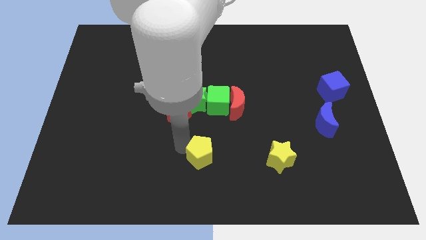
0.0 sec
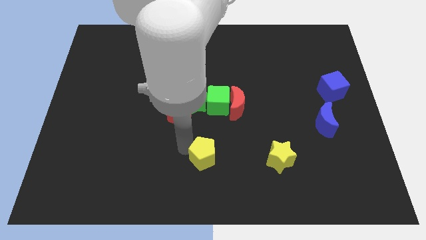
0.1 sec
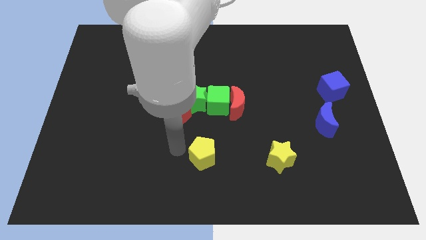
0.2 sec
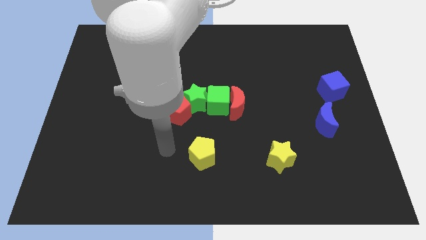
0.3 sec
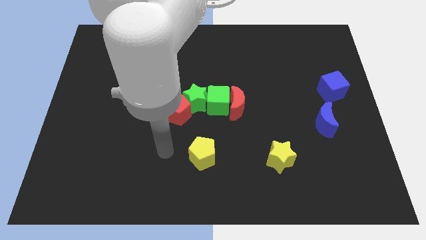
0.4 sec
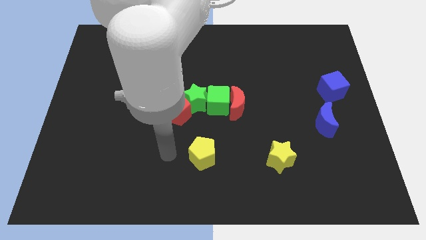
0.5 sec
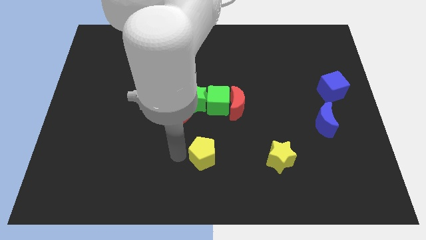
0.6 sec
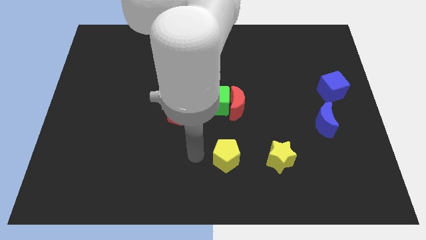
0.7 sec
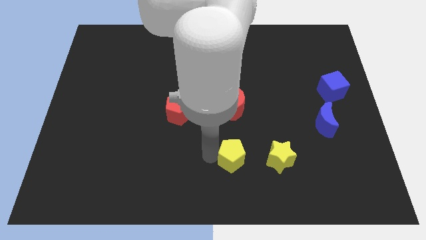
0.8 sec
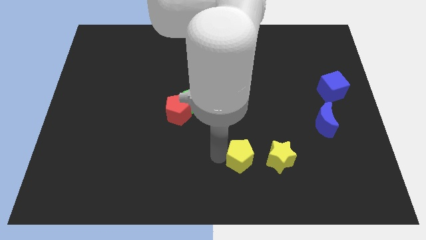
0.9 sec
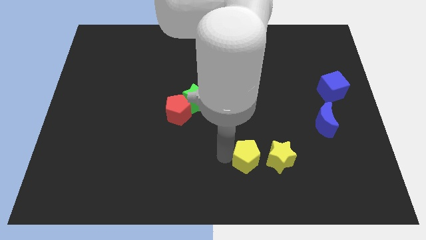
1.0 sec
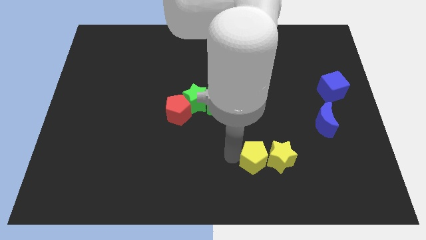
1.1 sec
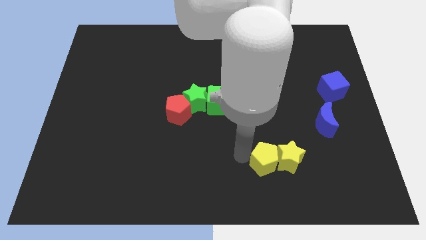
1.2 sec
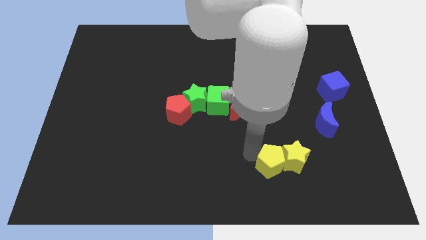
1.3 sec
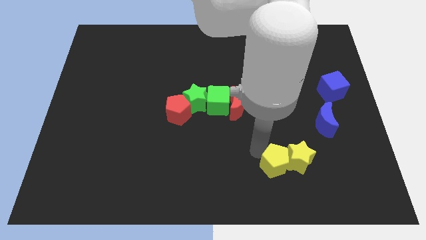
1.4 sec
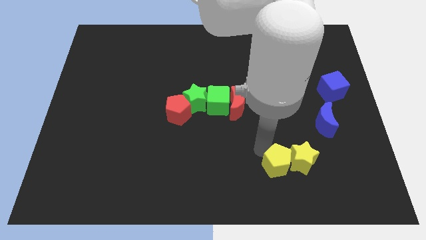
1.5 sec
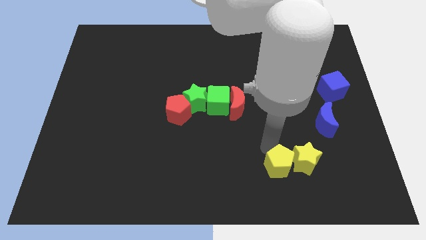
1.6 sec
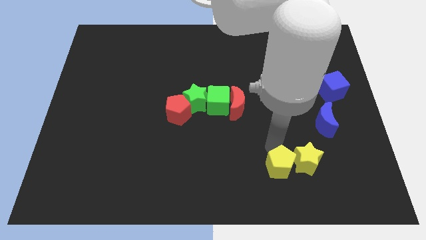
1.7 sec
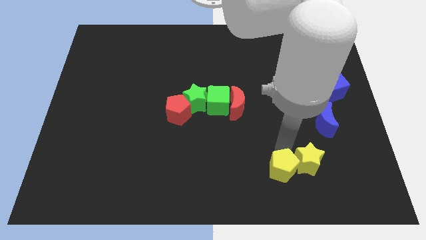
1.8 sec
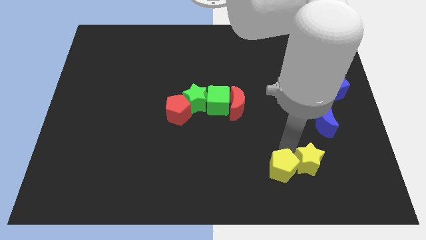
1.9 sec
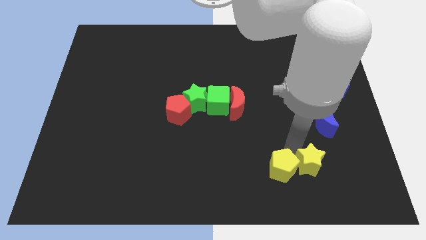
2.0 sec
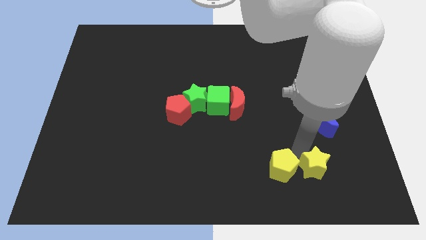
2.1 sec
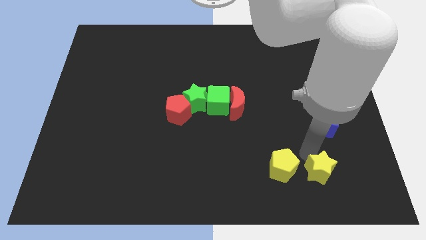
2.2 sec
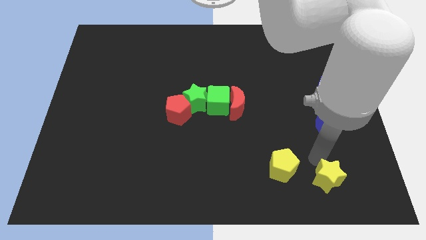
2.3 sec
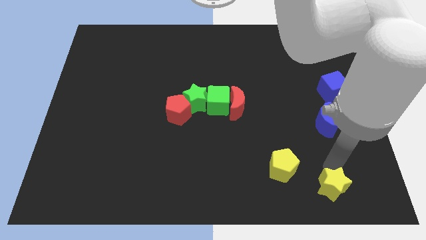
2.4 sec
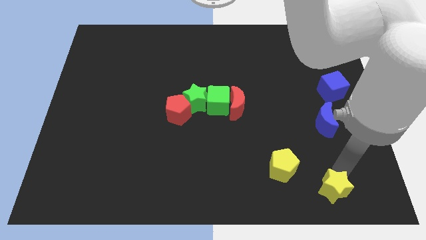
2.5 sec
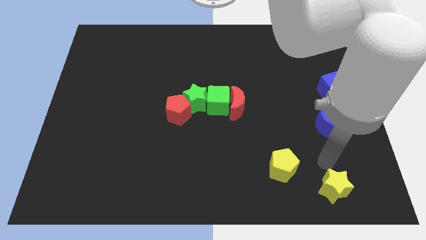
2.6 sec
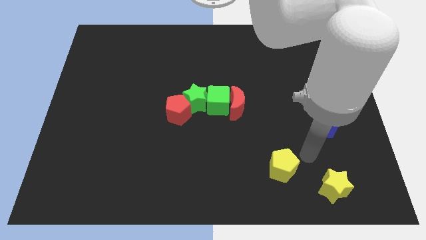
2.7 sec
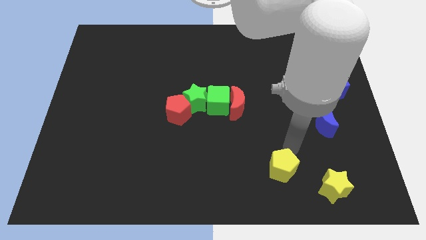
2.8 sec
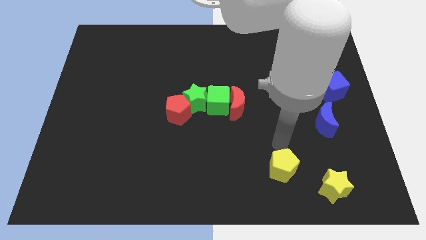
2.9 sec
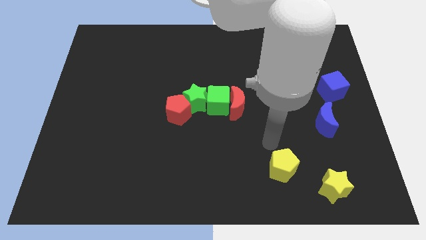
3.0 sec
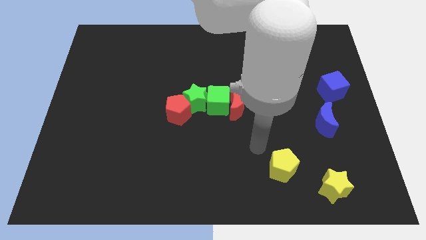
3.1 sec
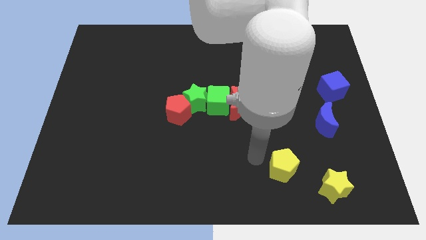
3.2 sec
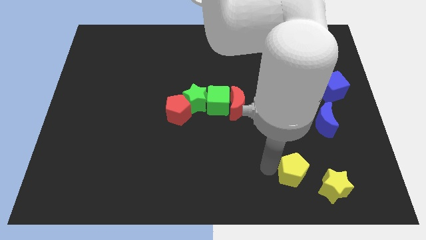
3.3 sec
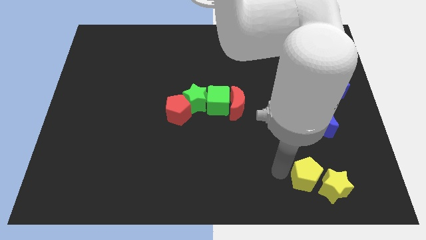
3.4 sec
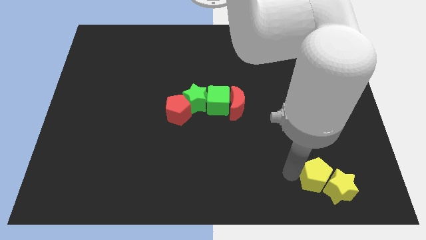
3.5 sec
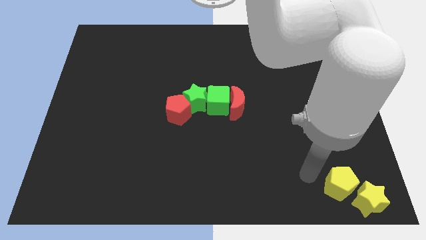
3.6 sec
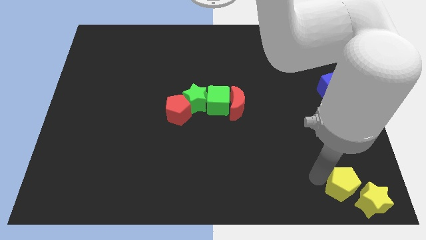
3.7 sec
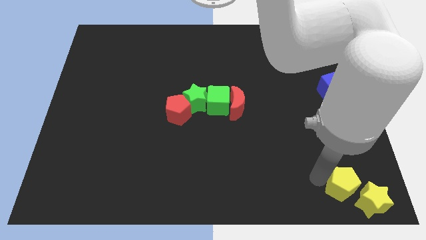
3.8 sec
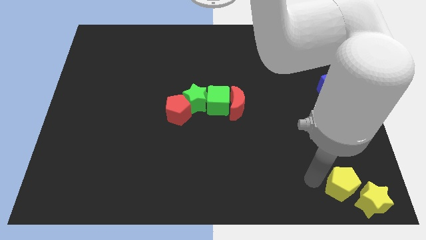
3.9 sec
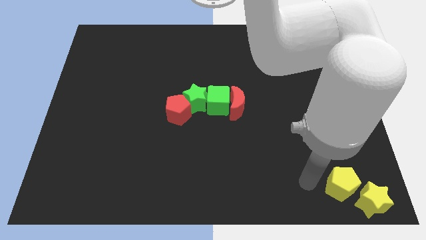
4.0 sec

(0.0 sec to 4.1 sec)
move the yellow pentagon to the top of the yellow star

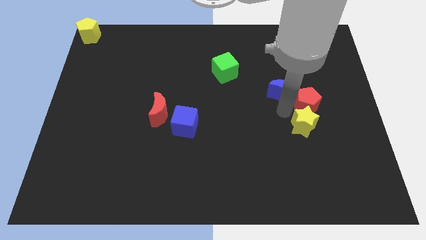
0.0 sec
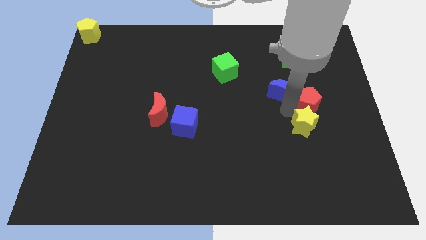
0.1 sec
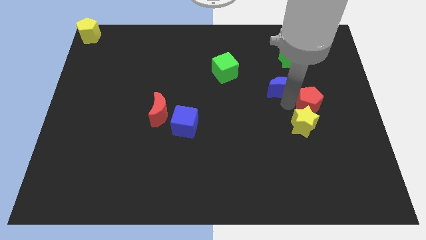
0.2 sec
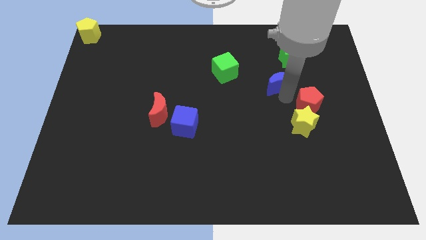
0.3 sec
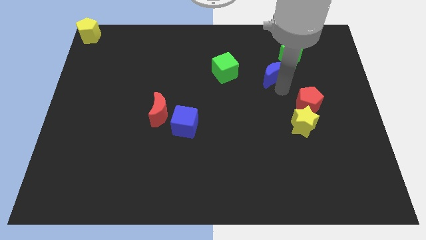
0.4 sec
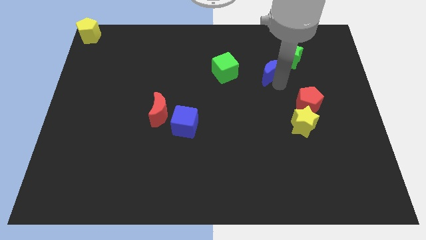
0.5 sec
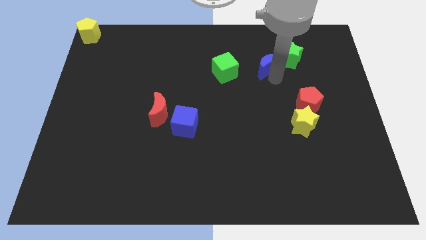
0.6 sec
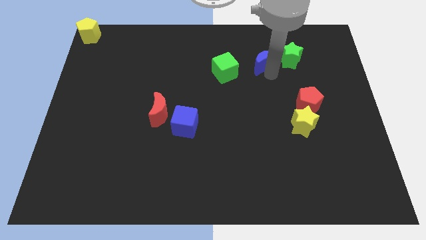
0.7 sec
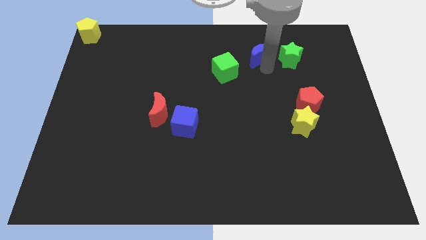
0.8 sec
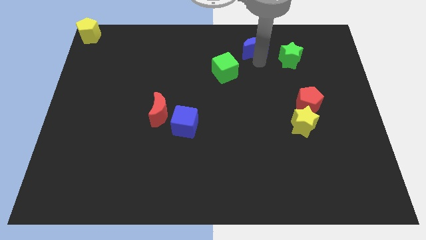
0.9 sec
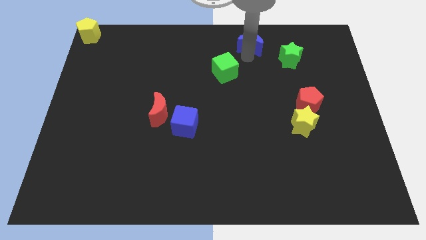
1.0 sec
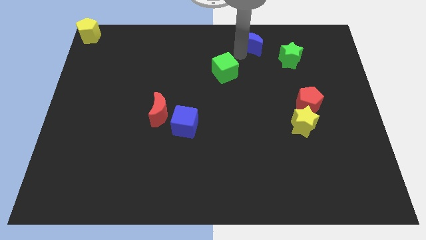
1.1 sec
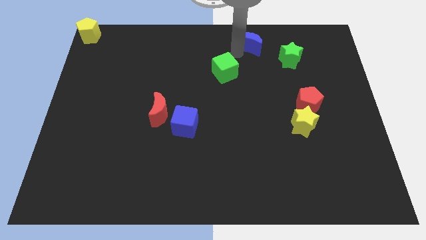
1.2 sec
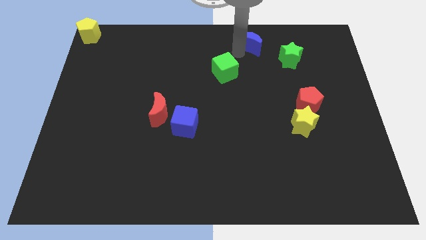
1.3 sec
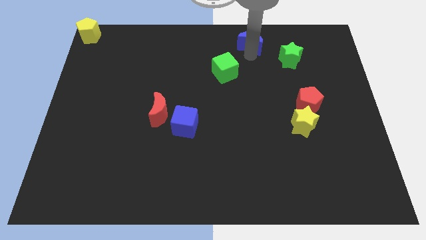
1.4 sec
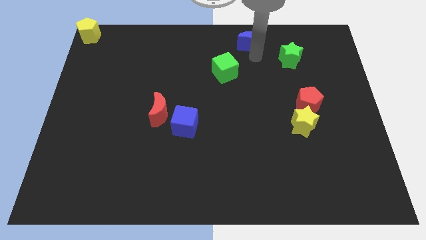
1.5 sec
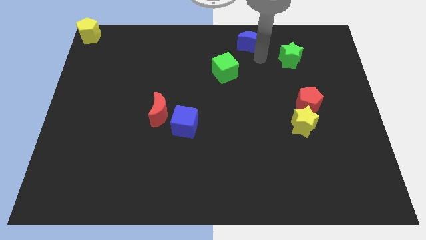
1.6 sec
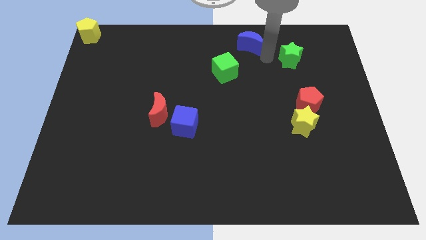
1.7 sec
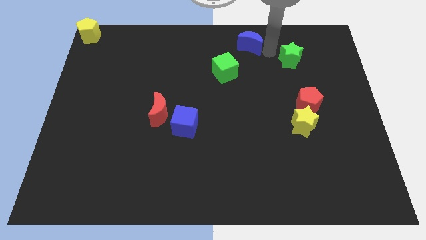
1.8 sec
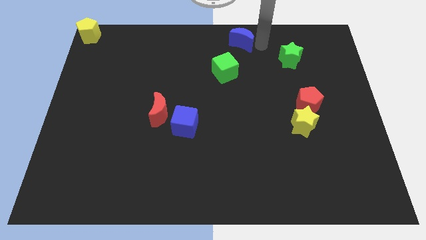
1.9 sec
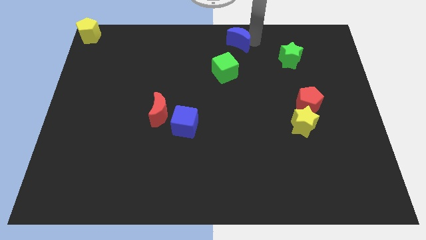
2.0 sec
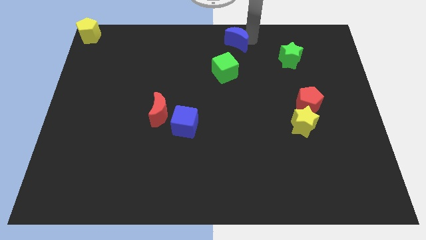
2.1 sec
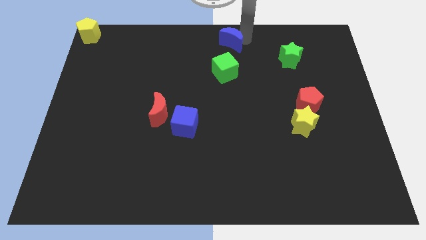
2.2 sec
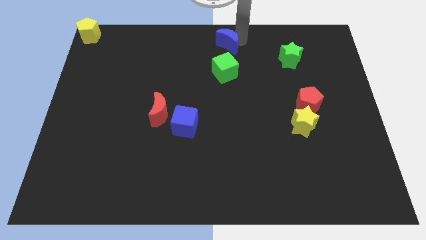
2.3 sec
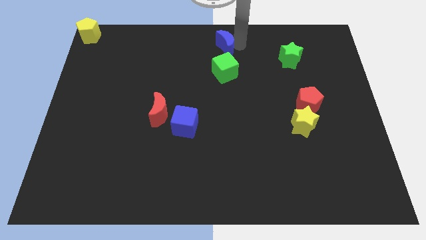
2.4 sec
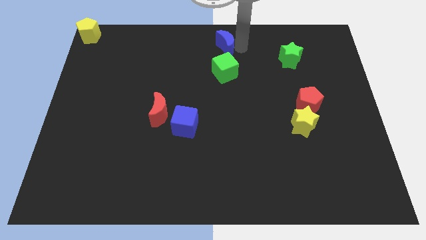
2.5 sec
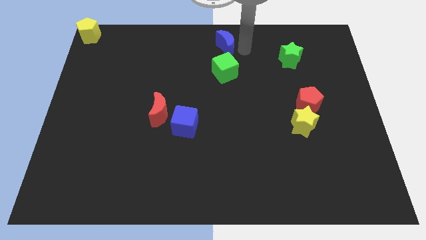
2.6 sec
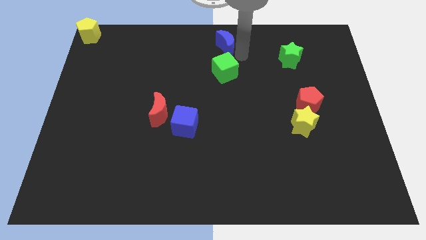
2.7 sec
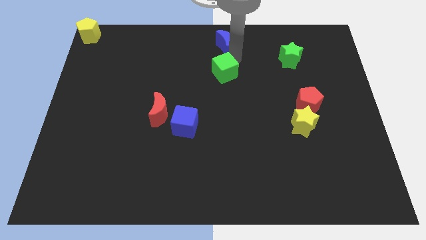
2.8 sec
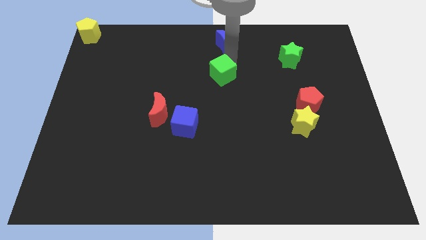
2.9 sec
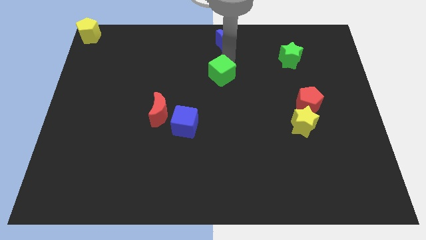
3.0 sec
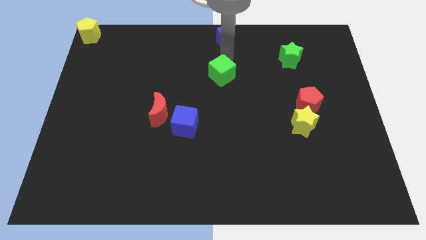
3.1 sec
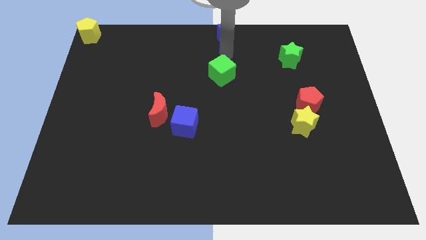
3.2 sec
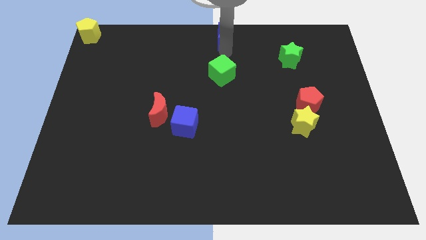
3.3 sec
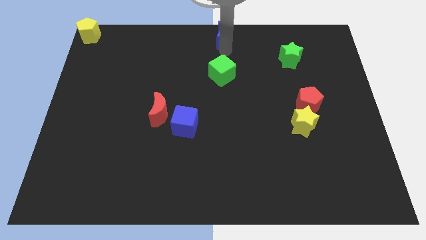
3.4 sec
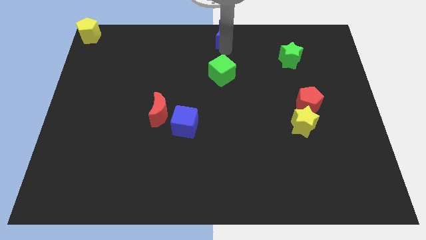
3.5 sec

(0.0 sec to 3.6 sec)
move the blue crescent to the top center of the board

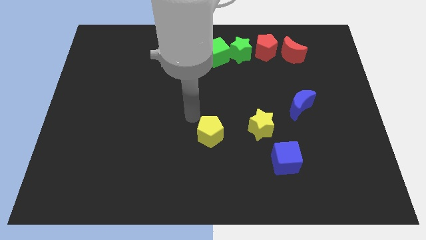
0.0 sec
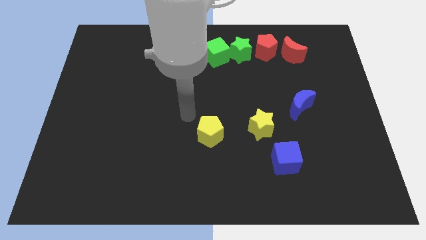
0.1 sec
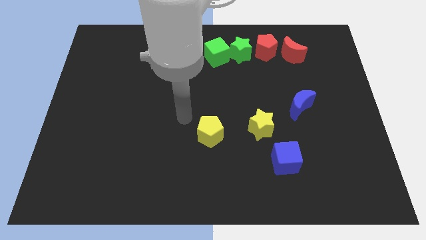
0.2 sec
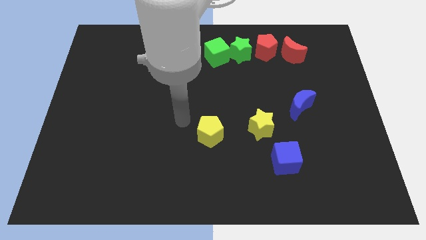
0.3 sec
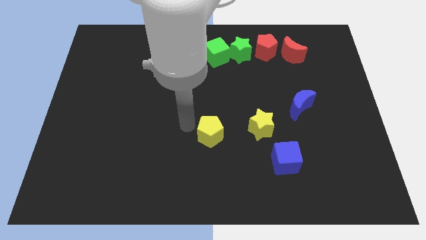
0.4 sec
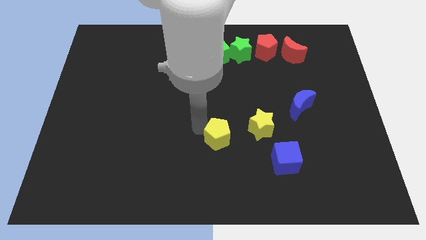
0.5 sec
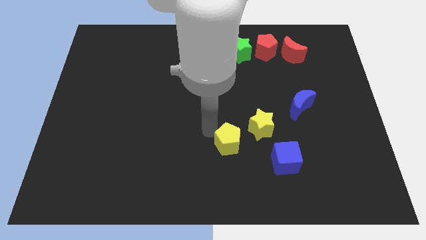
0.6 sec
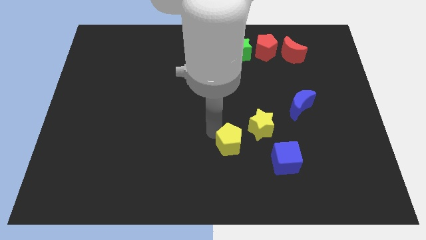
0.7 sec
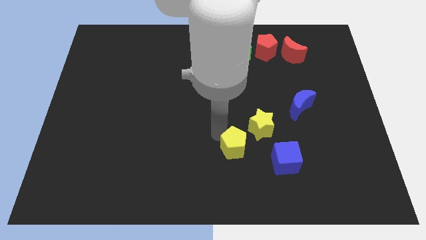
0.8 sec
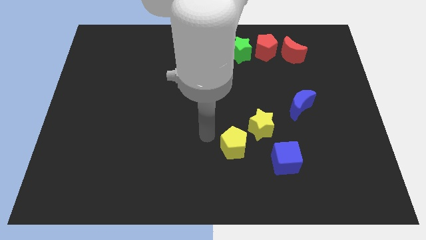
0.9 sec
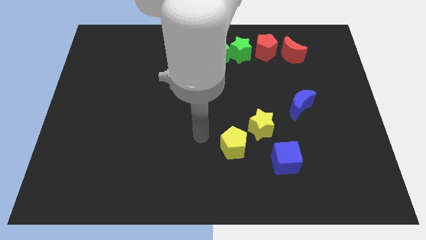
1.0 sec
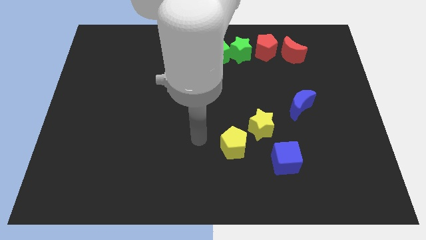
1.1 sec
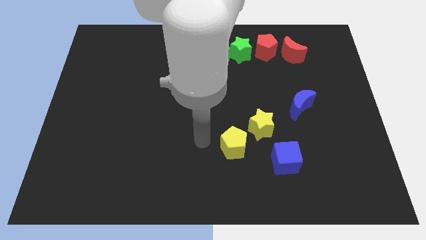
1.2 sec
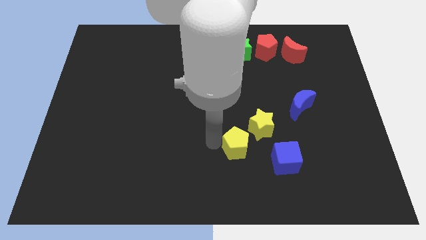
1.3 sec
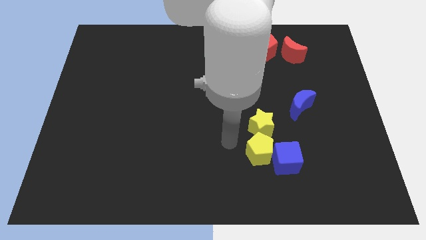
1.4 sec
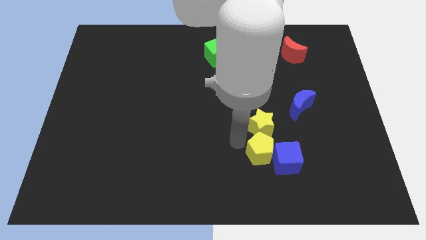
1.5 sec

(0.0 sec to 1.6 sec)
place the yellow pentagon below the yellow star
